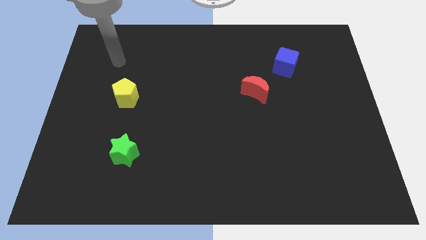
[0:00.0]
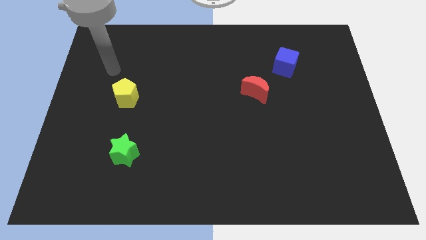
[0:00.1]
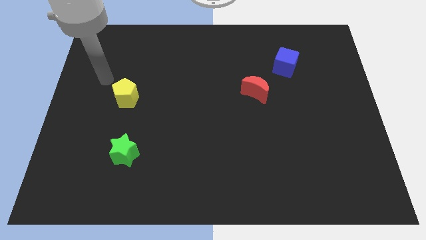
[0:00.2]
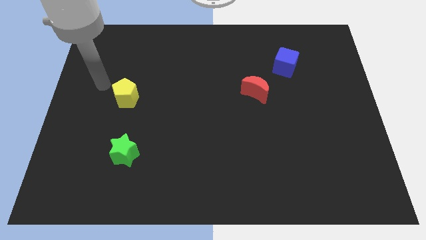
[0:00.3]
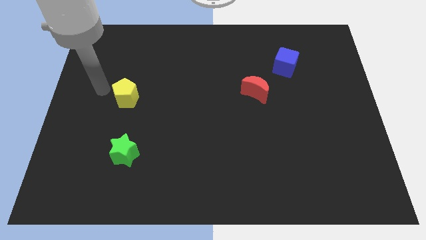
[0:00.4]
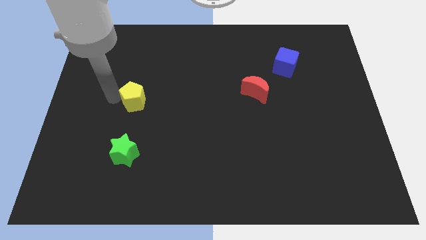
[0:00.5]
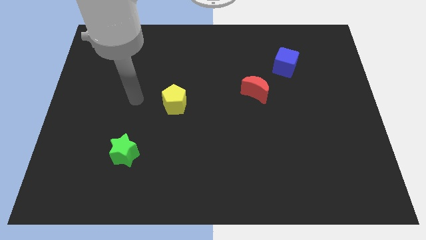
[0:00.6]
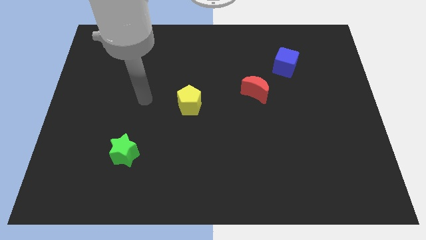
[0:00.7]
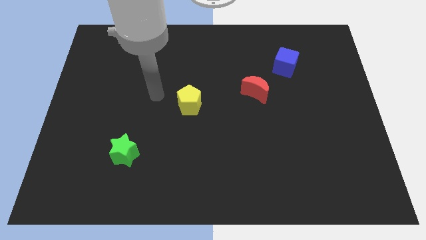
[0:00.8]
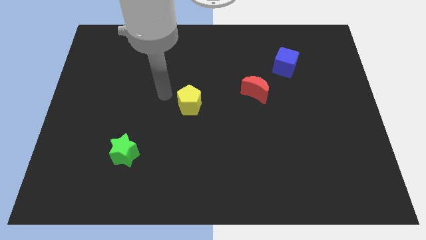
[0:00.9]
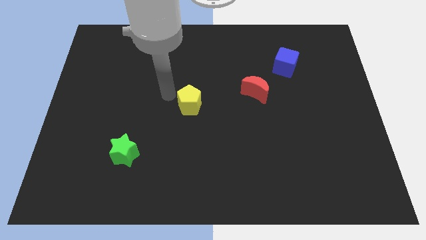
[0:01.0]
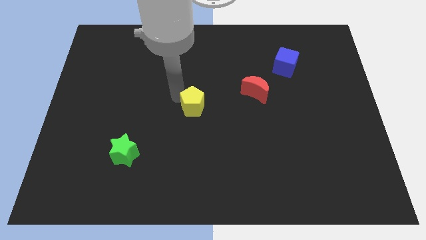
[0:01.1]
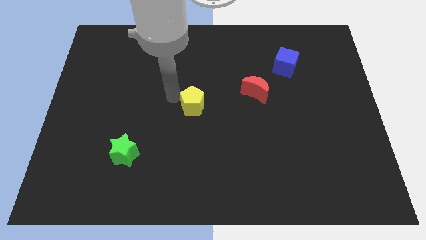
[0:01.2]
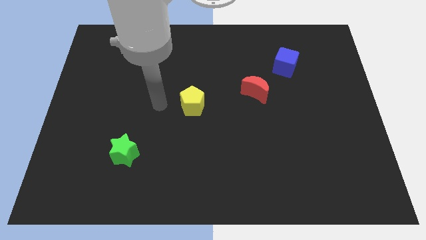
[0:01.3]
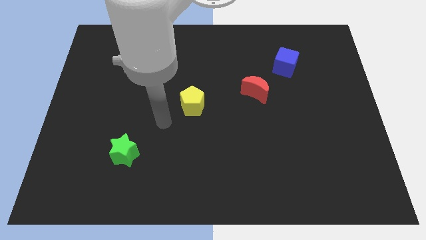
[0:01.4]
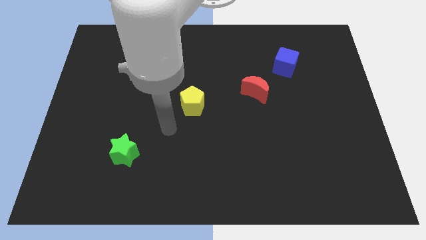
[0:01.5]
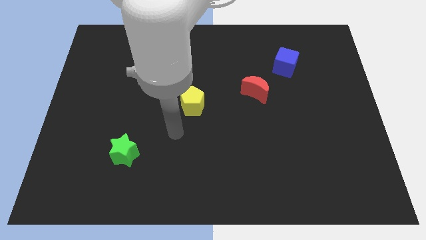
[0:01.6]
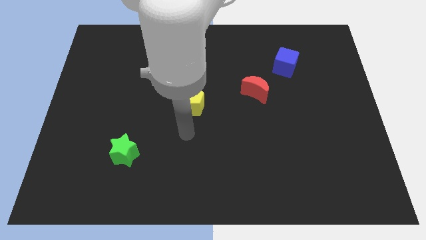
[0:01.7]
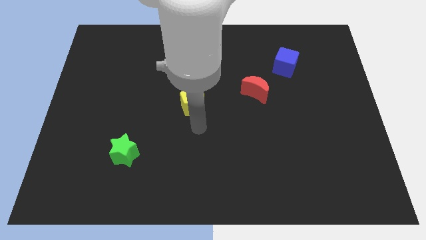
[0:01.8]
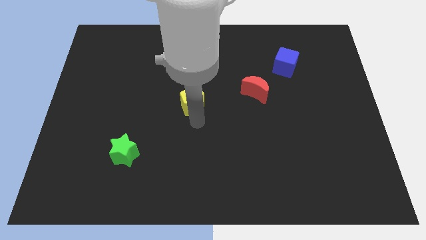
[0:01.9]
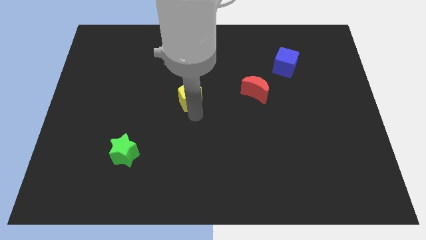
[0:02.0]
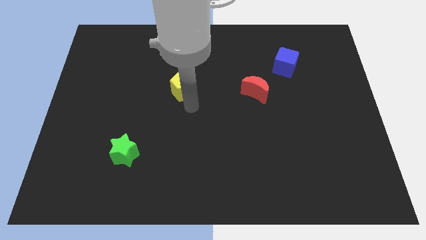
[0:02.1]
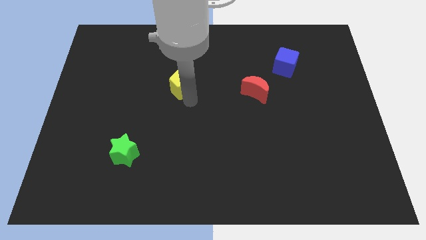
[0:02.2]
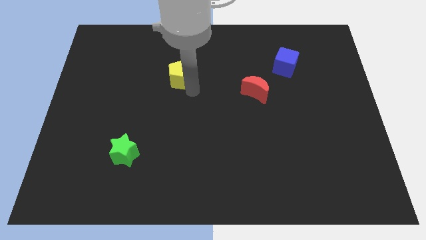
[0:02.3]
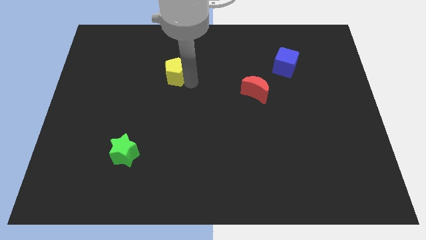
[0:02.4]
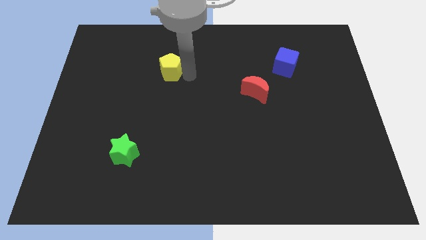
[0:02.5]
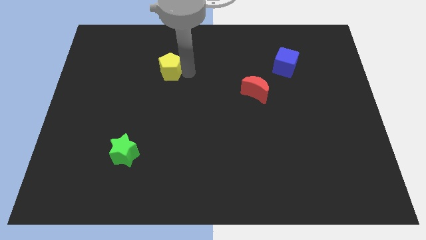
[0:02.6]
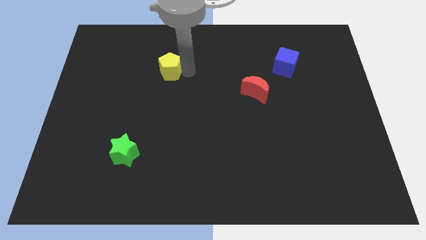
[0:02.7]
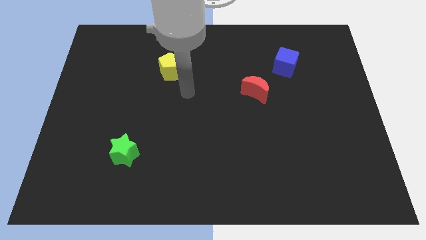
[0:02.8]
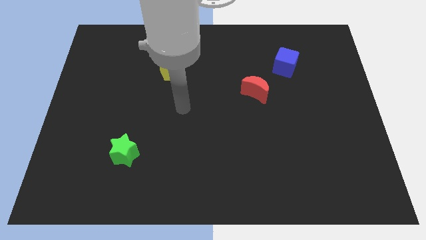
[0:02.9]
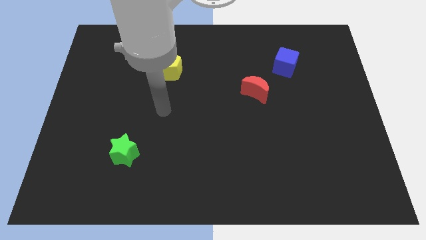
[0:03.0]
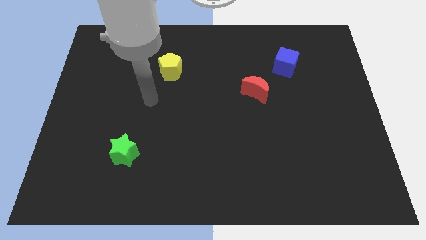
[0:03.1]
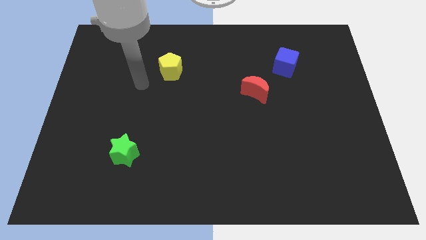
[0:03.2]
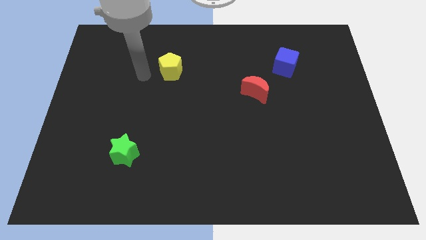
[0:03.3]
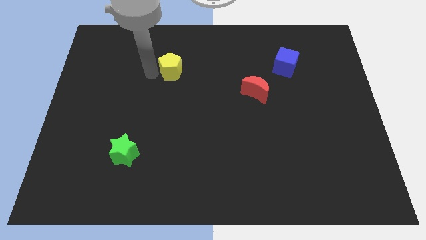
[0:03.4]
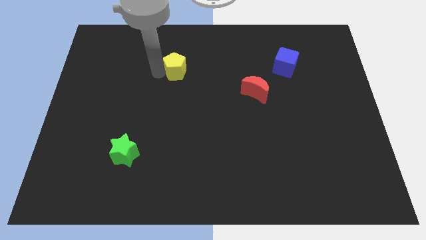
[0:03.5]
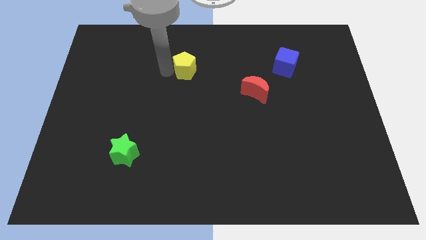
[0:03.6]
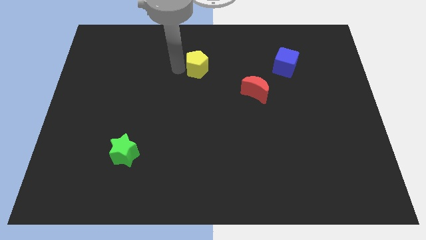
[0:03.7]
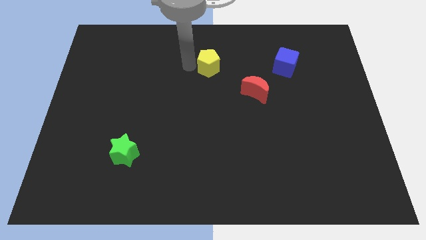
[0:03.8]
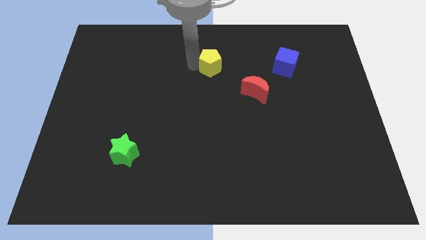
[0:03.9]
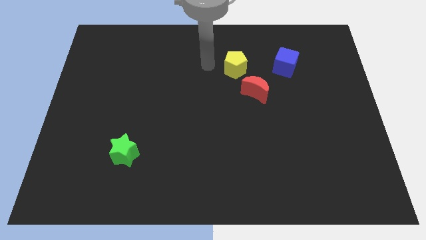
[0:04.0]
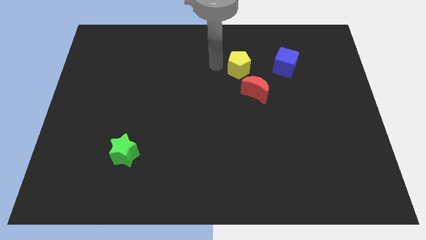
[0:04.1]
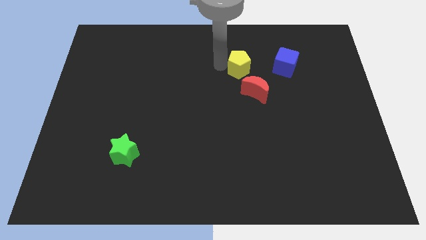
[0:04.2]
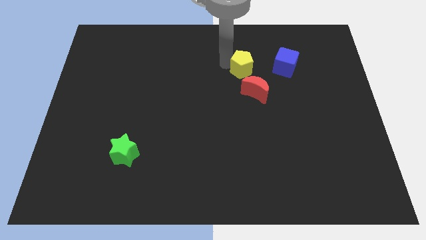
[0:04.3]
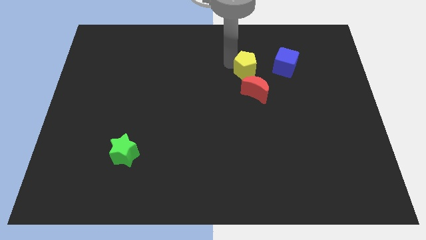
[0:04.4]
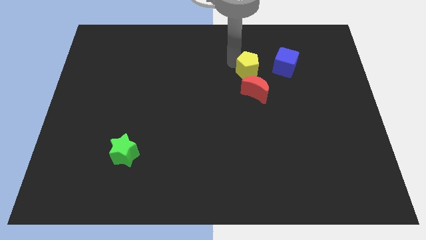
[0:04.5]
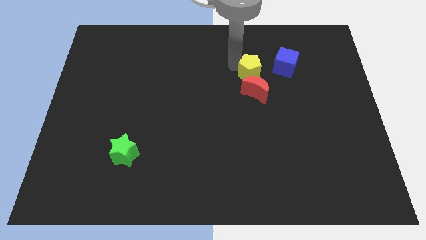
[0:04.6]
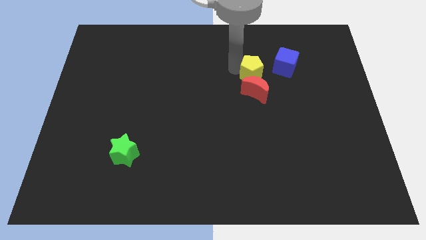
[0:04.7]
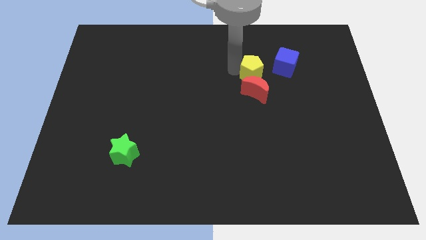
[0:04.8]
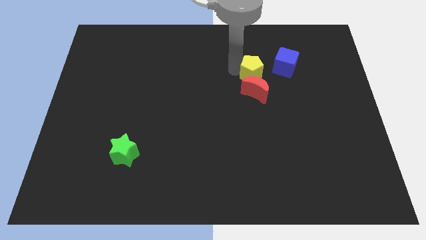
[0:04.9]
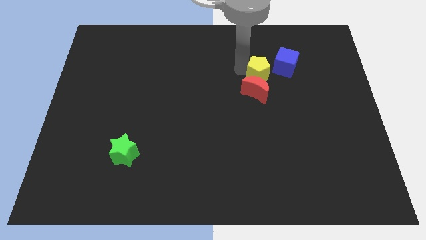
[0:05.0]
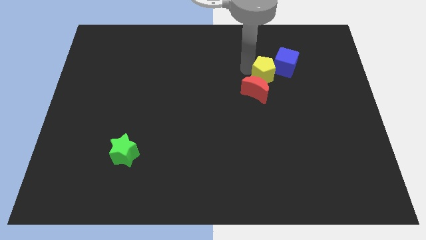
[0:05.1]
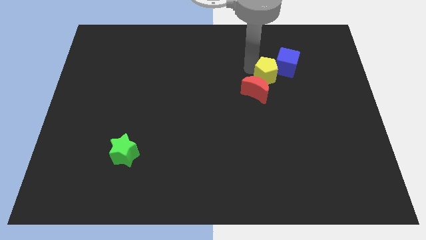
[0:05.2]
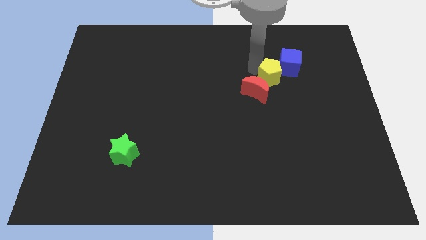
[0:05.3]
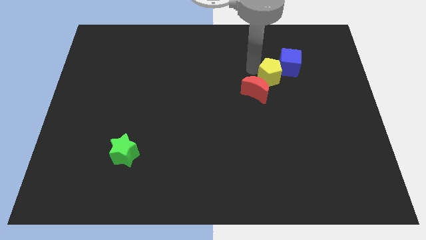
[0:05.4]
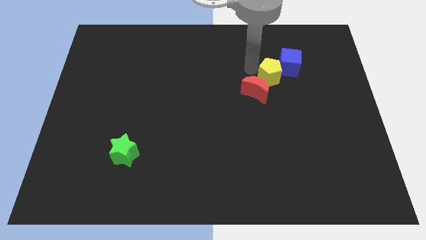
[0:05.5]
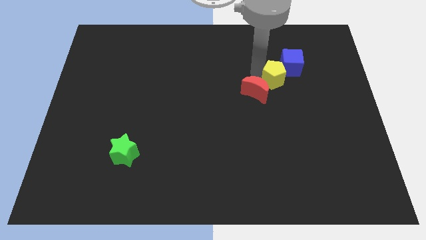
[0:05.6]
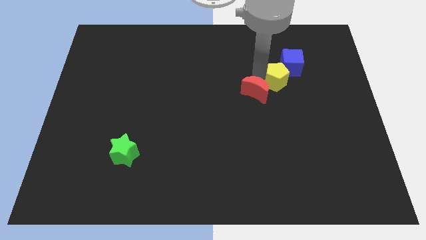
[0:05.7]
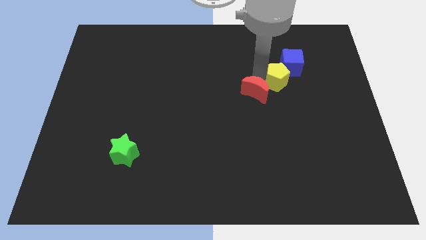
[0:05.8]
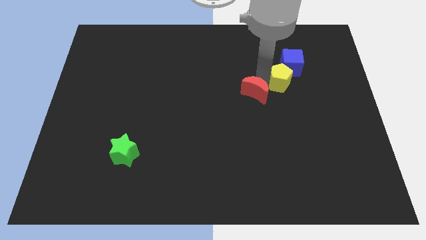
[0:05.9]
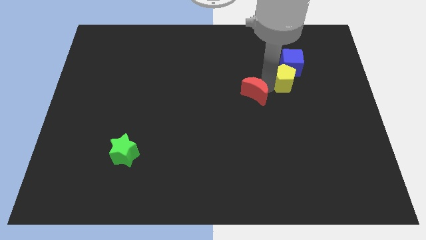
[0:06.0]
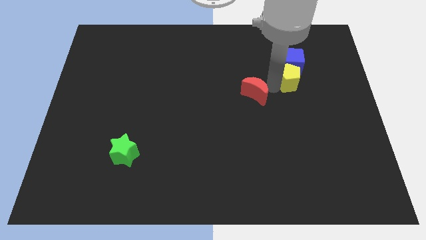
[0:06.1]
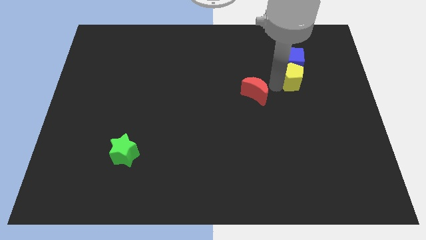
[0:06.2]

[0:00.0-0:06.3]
put the yellow pentagon close to the blue cube

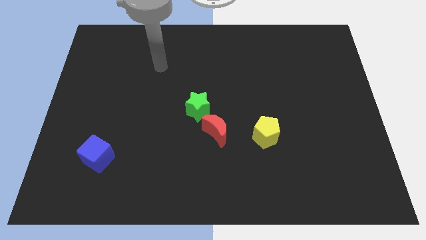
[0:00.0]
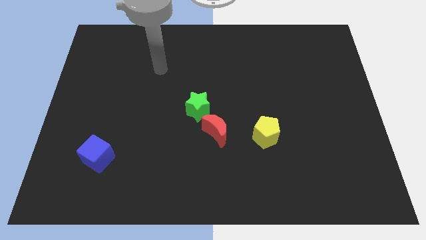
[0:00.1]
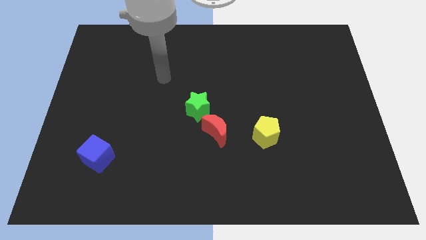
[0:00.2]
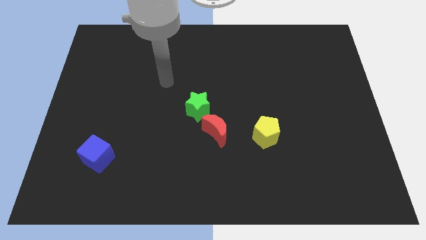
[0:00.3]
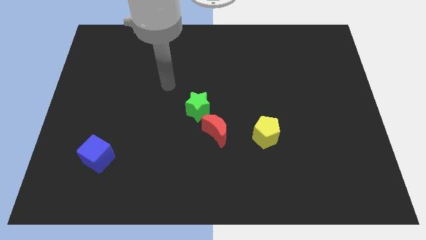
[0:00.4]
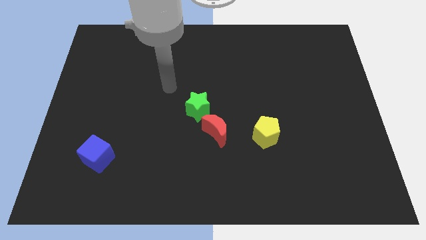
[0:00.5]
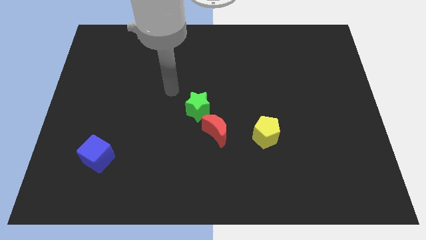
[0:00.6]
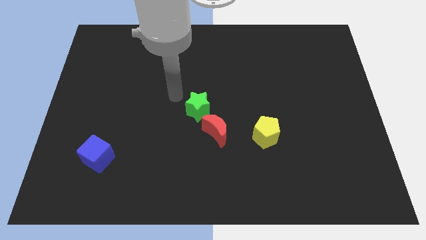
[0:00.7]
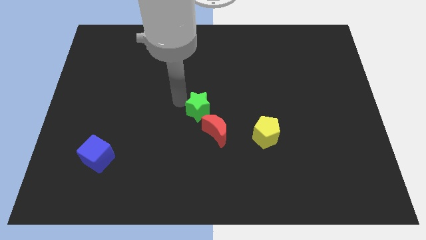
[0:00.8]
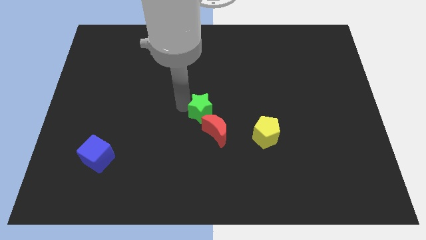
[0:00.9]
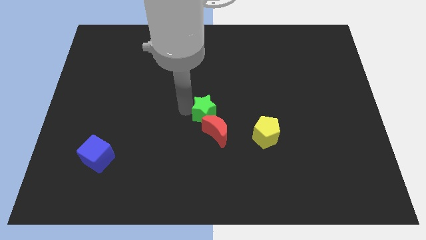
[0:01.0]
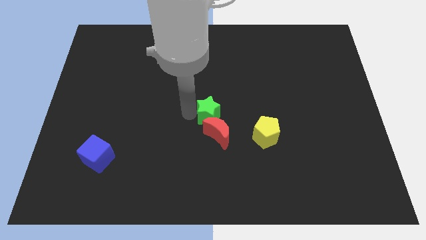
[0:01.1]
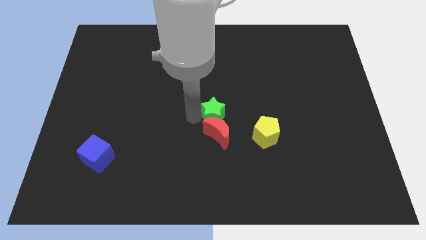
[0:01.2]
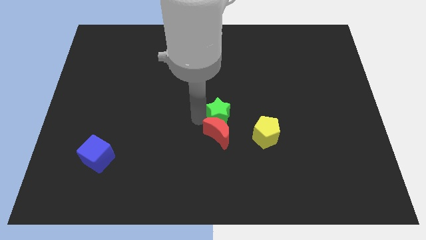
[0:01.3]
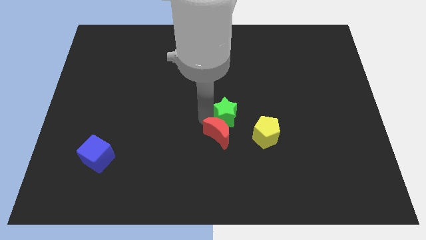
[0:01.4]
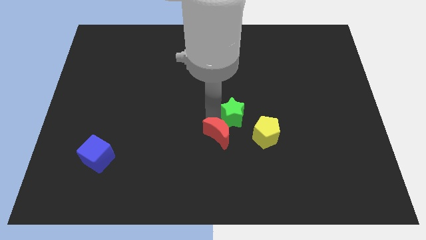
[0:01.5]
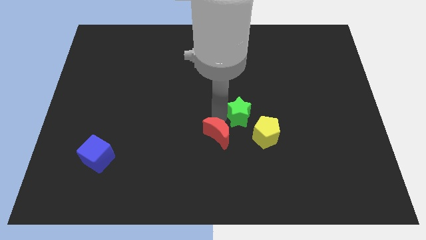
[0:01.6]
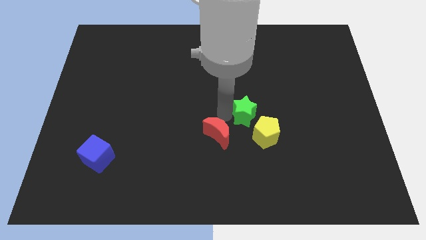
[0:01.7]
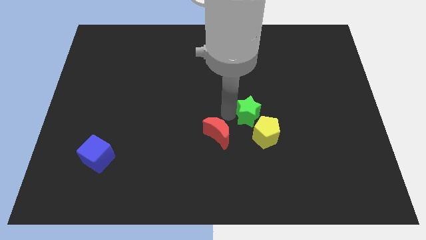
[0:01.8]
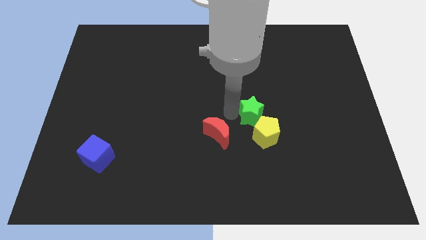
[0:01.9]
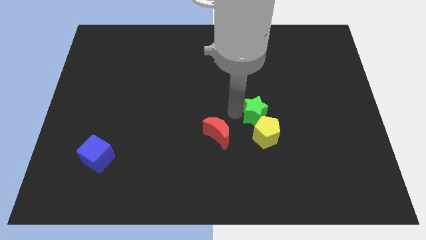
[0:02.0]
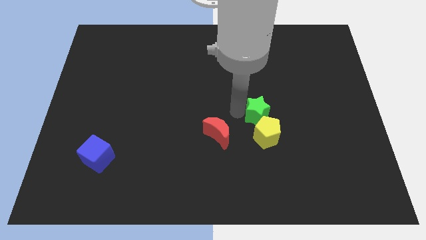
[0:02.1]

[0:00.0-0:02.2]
push the green star next to the yellow pentagon
